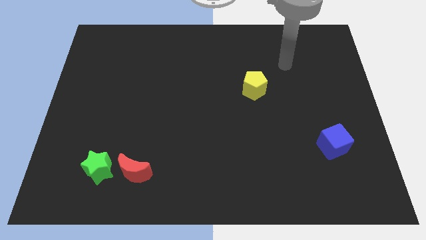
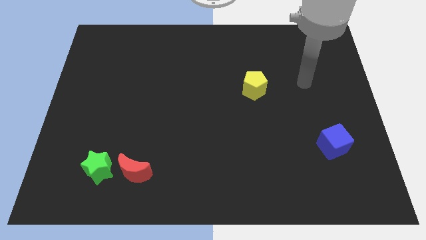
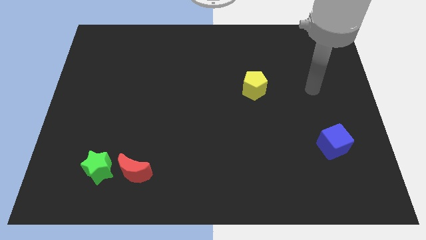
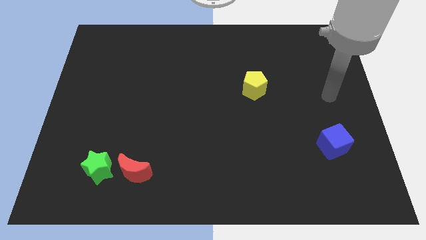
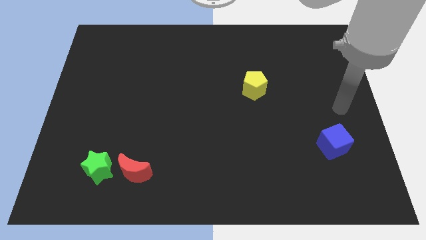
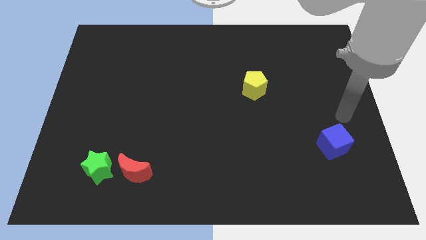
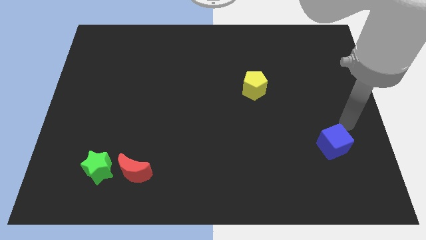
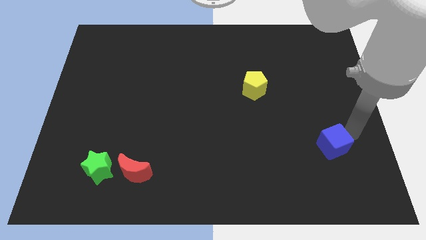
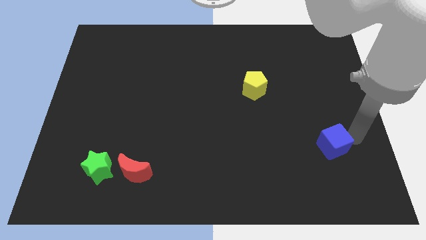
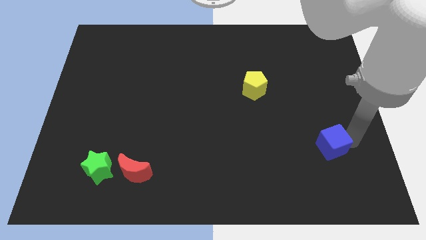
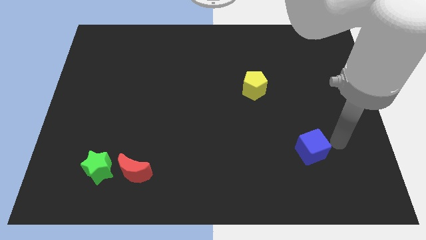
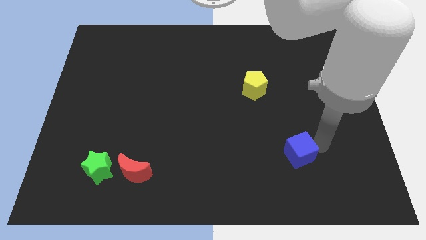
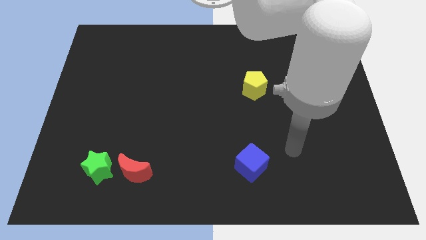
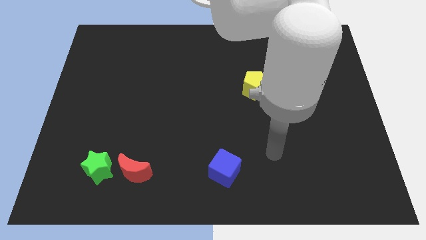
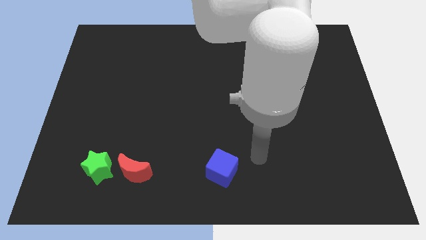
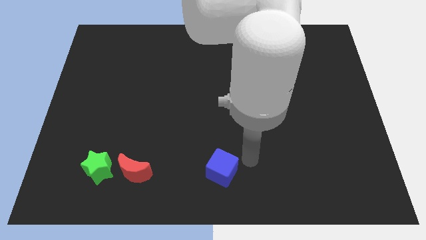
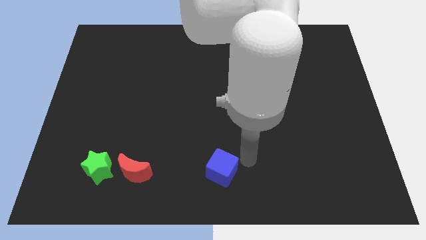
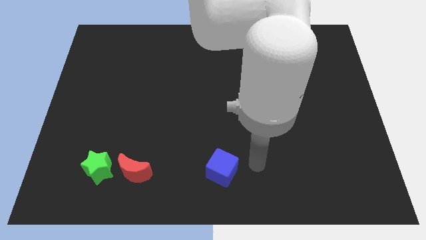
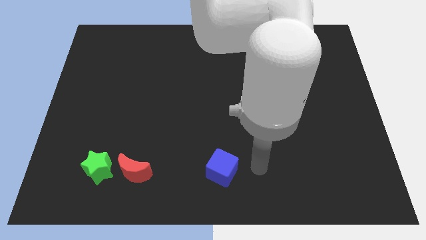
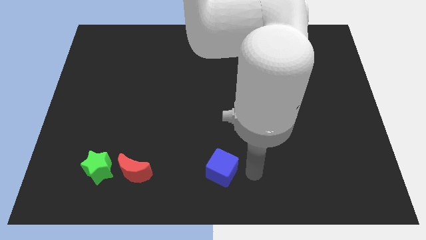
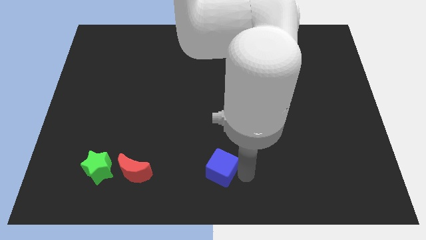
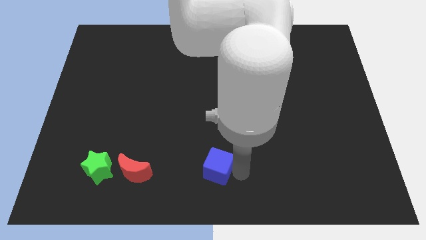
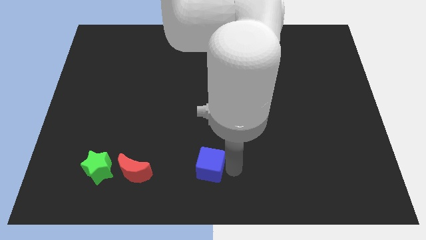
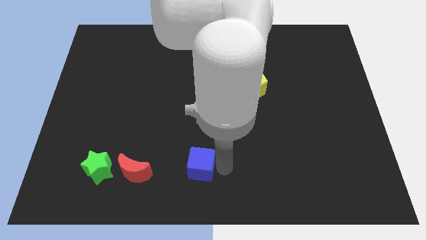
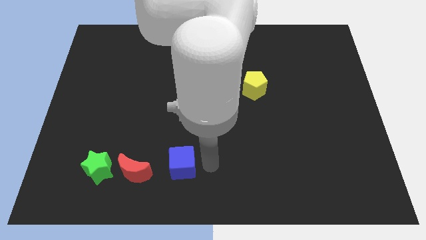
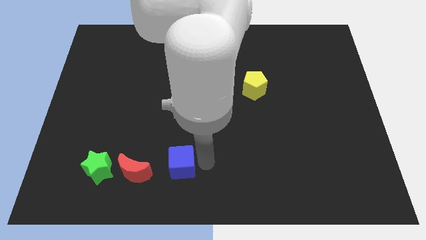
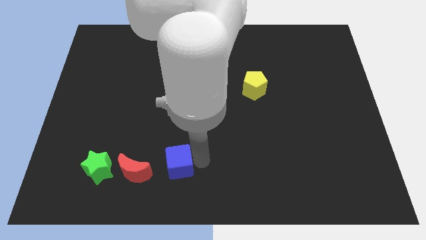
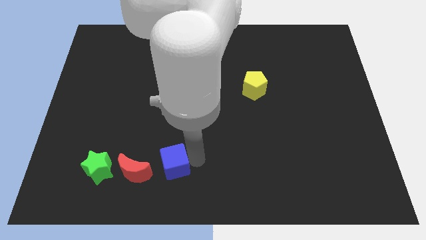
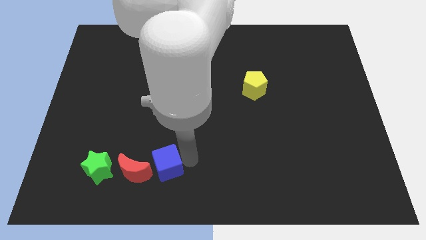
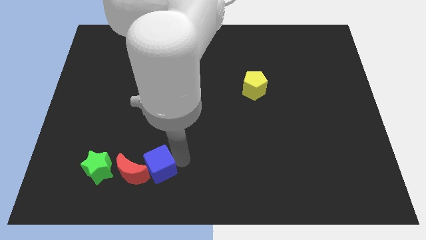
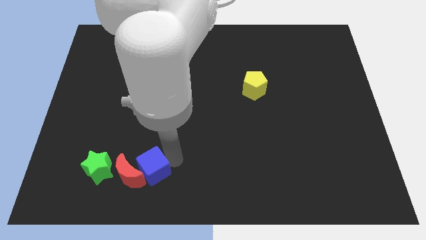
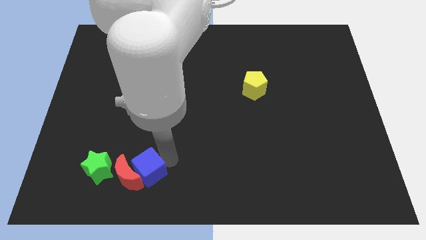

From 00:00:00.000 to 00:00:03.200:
push the cube close to the red moon

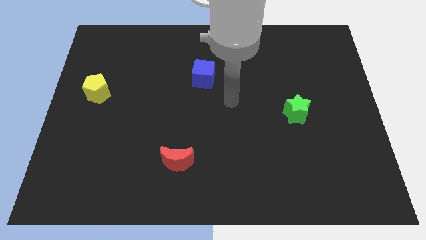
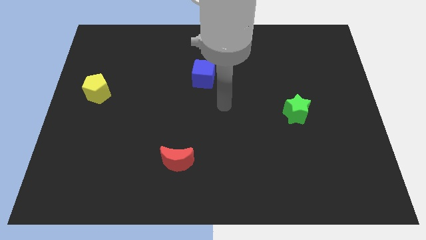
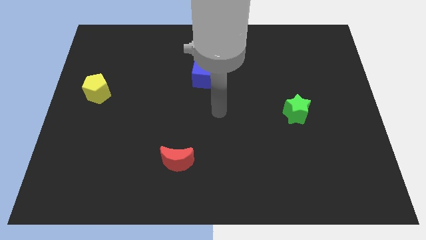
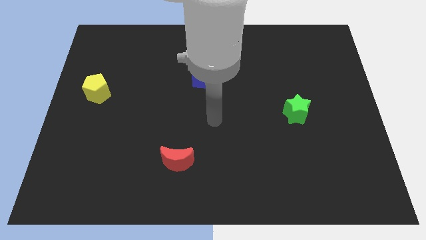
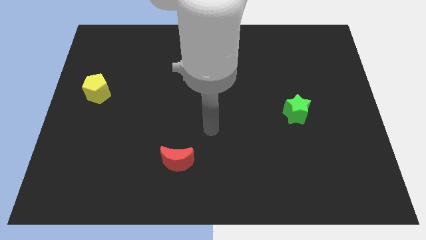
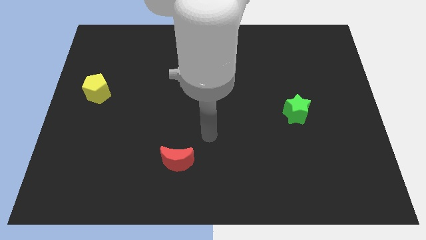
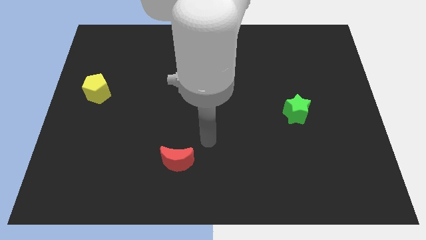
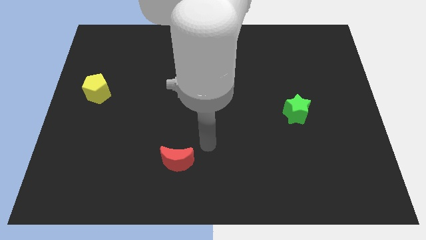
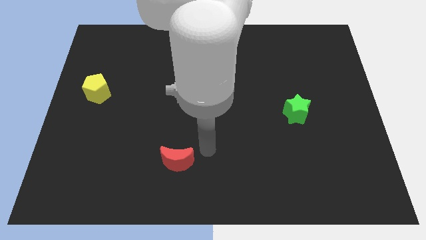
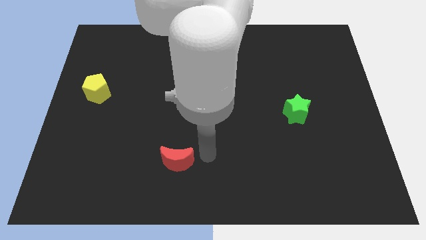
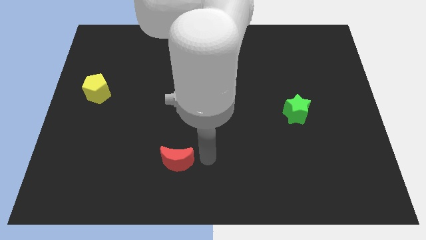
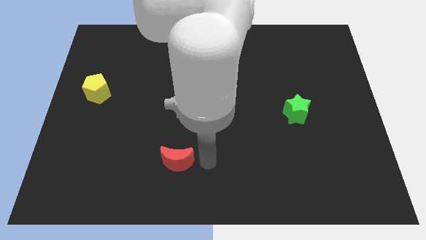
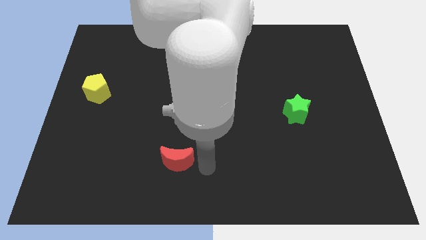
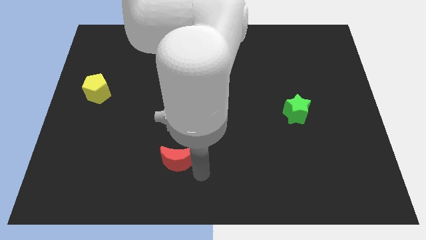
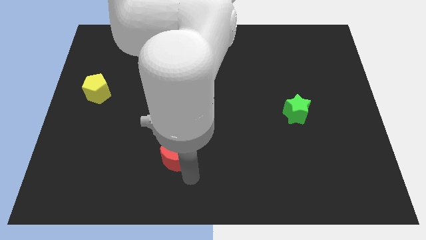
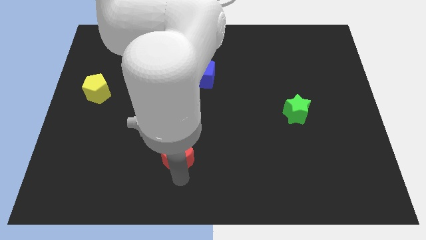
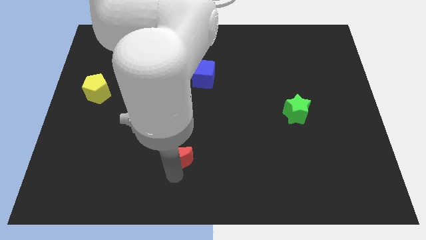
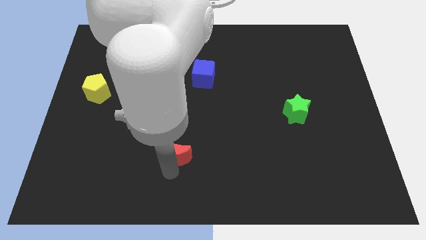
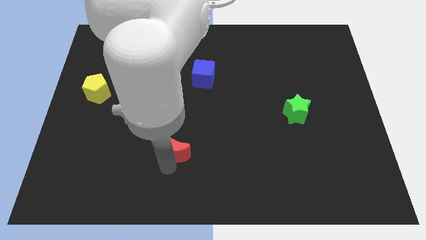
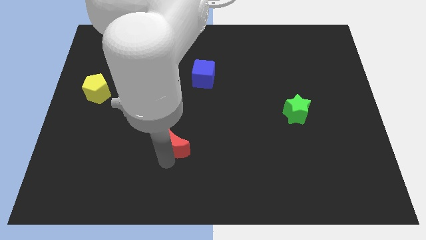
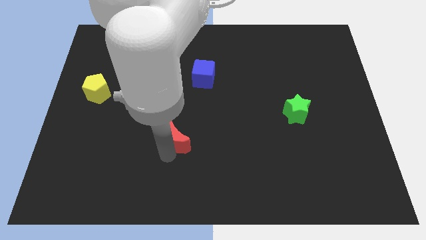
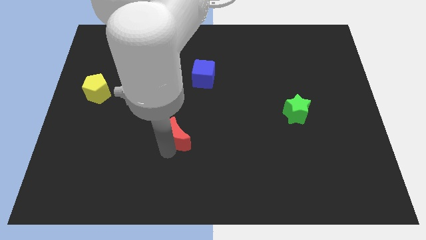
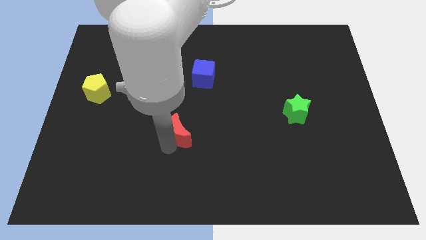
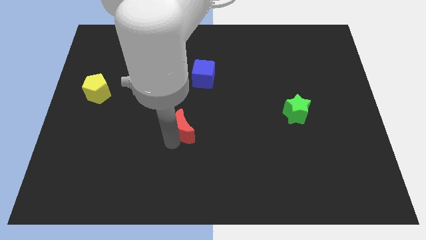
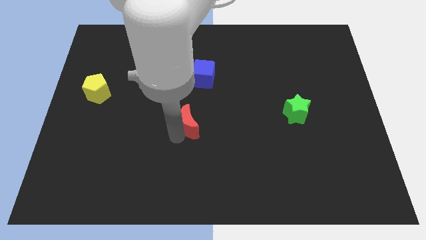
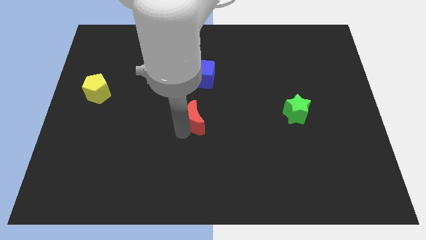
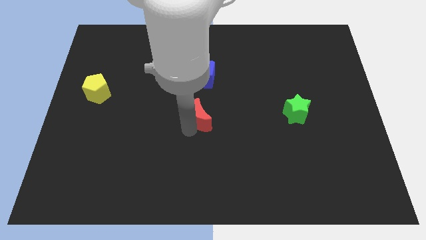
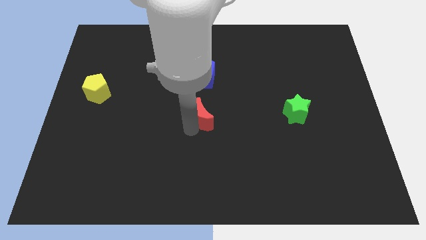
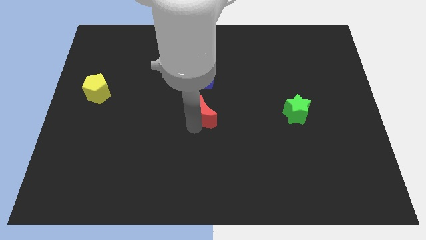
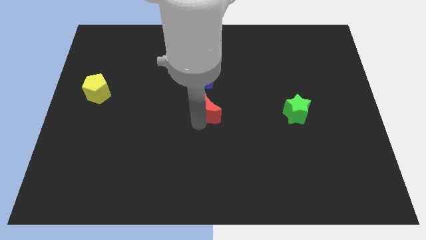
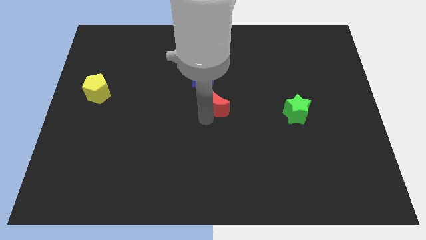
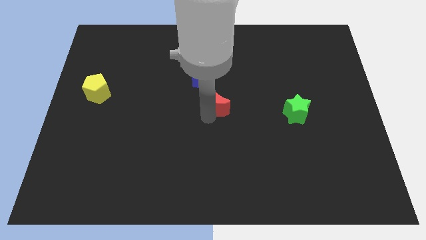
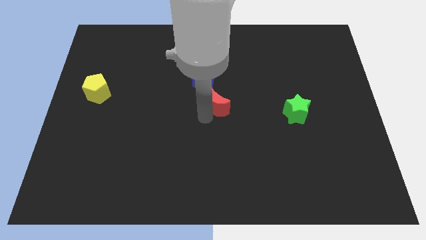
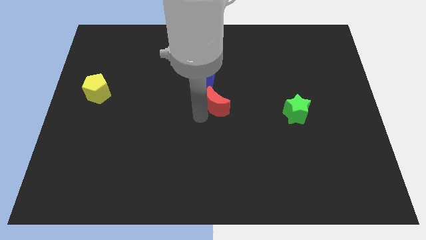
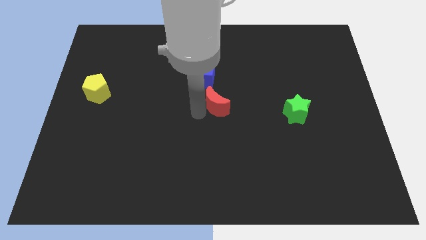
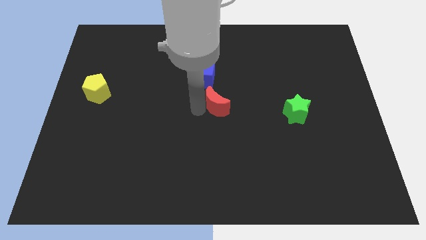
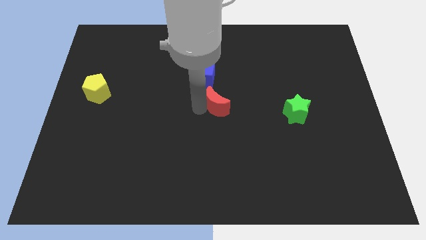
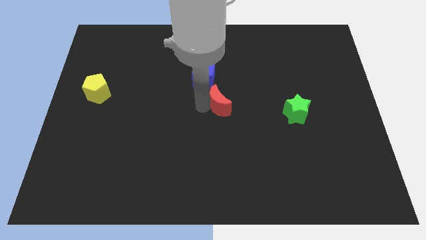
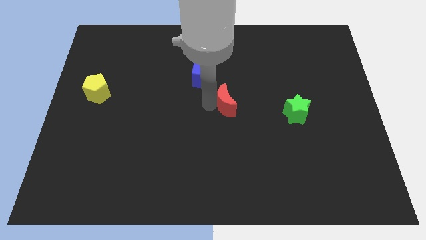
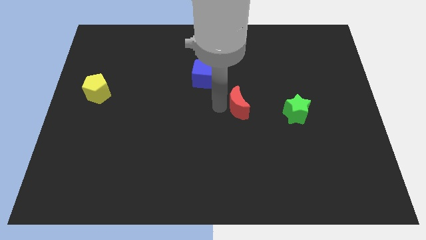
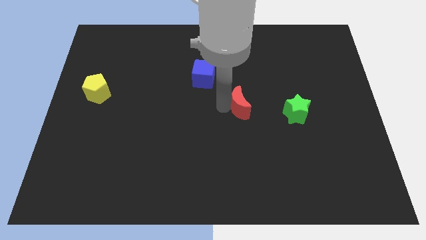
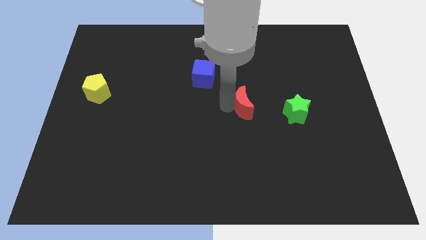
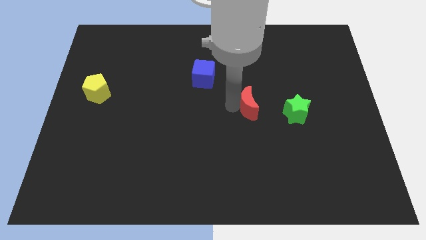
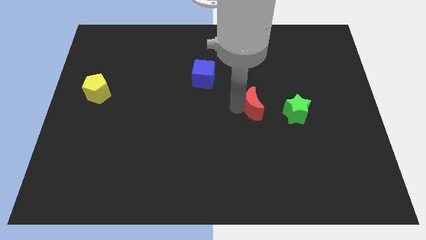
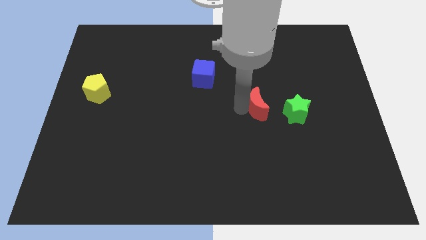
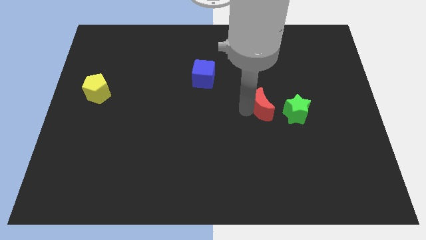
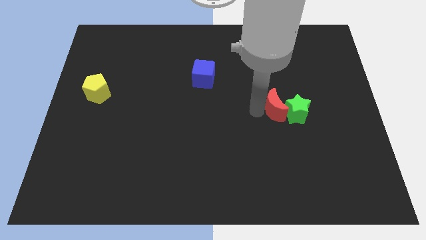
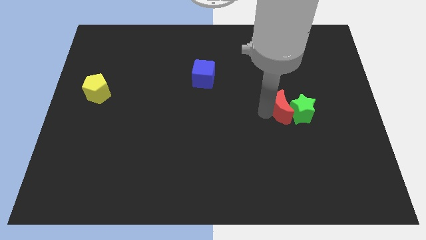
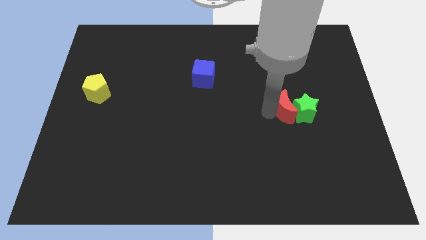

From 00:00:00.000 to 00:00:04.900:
slide the red moon to the star
